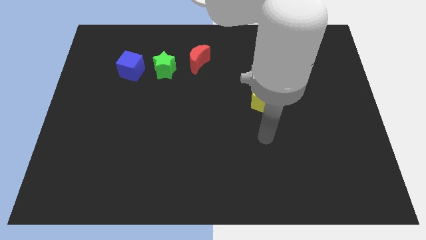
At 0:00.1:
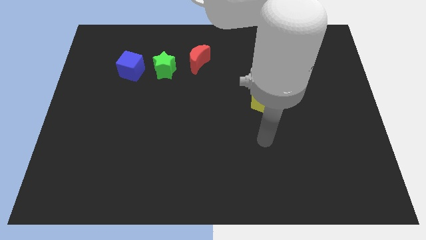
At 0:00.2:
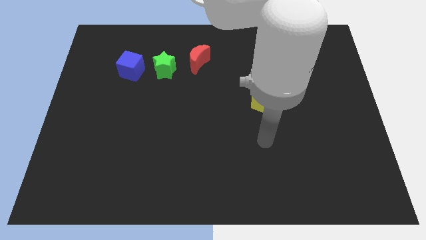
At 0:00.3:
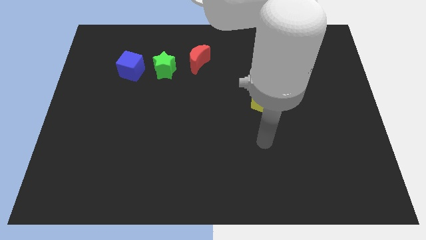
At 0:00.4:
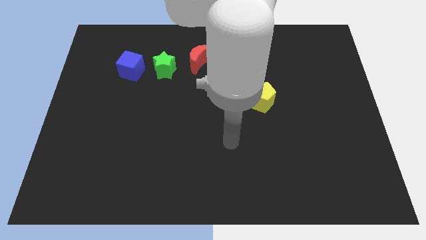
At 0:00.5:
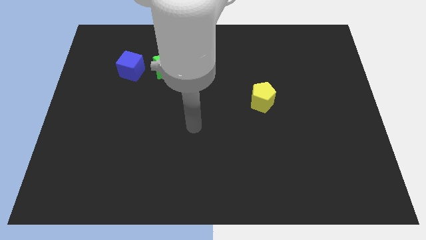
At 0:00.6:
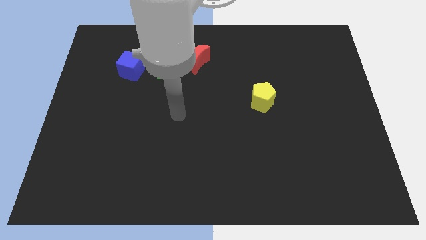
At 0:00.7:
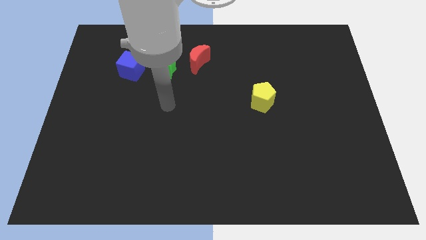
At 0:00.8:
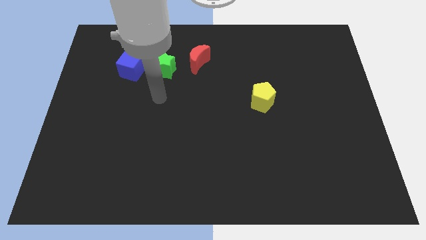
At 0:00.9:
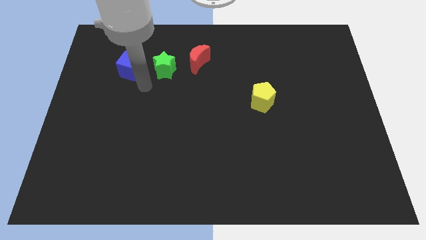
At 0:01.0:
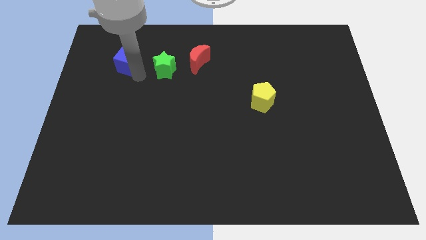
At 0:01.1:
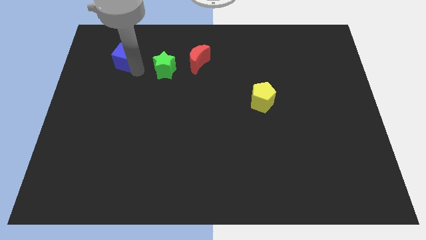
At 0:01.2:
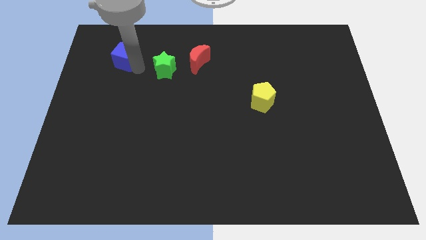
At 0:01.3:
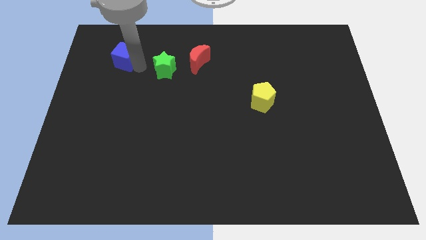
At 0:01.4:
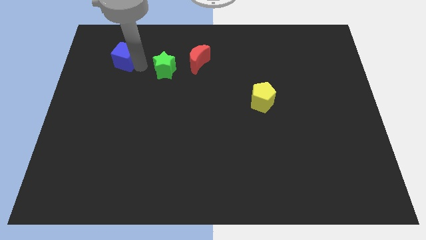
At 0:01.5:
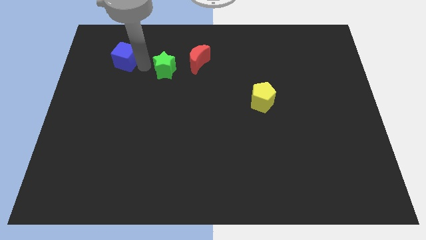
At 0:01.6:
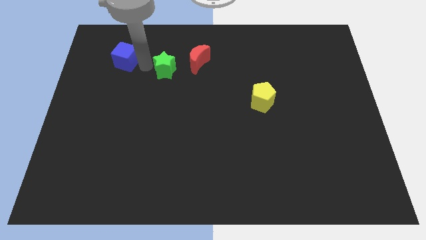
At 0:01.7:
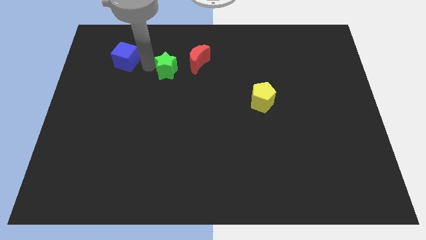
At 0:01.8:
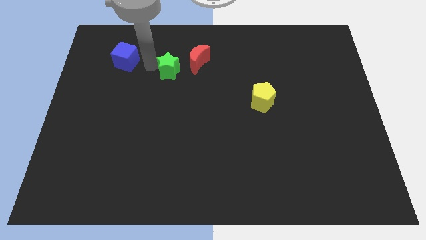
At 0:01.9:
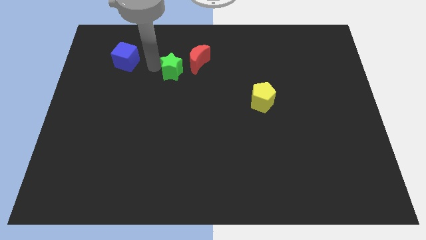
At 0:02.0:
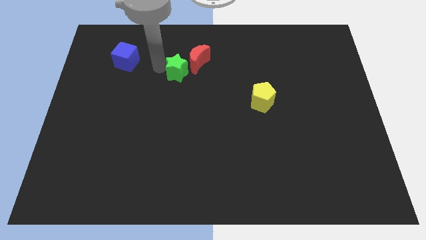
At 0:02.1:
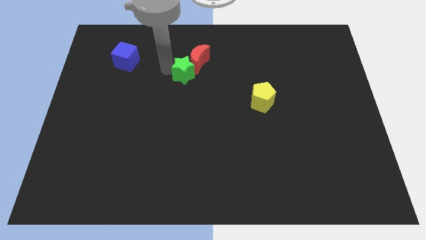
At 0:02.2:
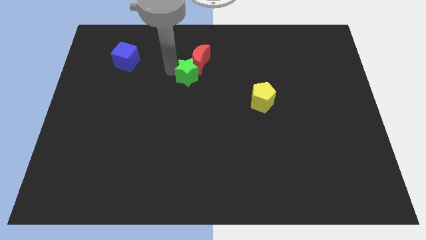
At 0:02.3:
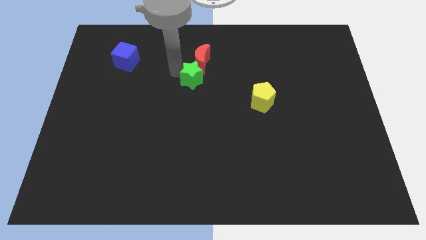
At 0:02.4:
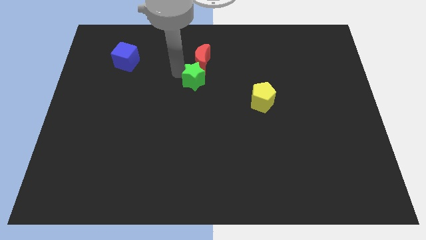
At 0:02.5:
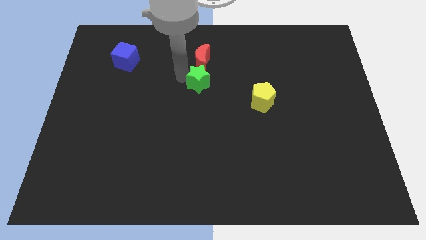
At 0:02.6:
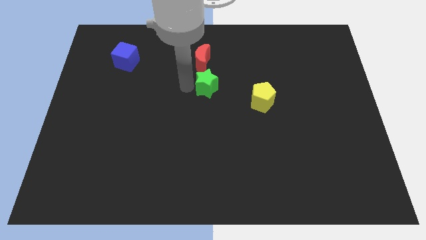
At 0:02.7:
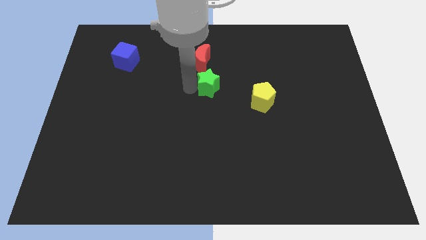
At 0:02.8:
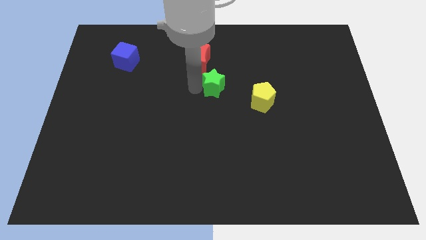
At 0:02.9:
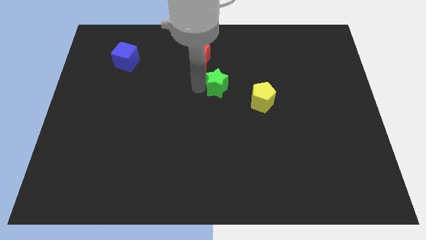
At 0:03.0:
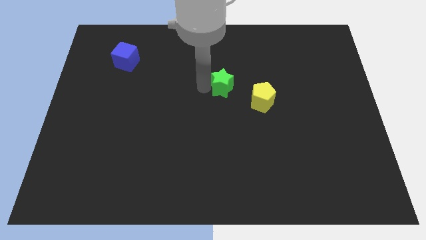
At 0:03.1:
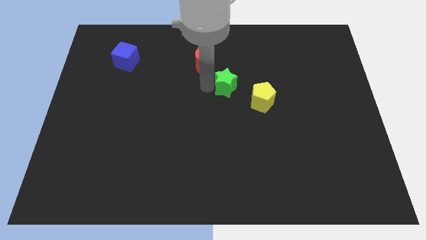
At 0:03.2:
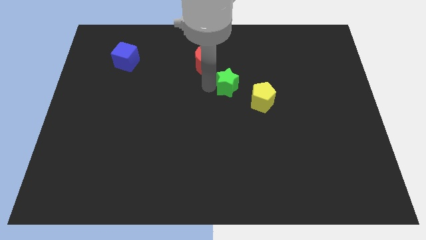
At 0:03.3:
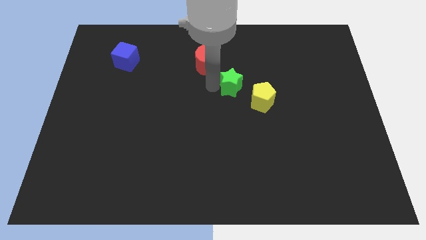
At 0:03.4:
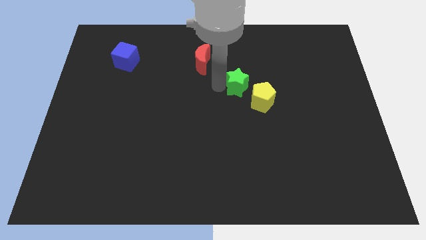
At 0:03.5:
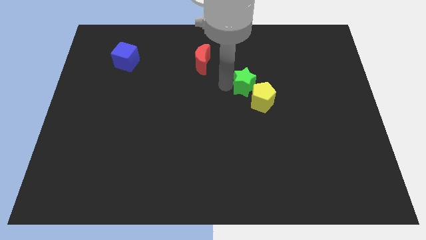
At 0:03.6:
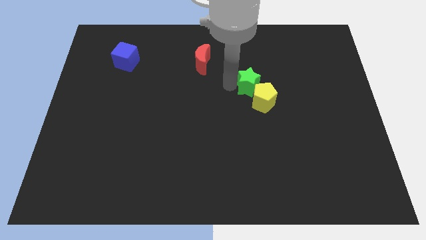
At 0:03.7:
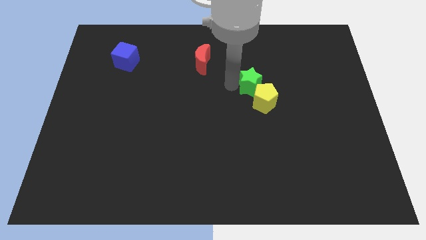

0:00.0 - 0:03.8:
push the green block to the pentagon

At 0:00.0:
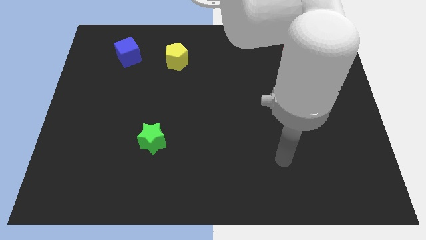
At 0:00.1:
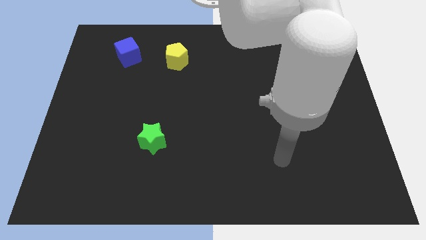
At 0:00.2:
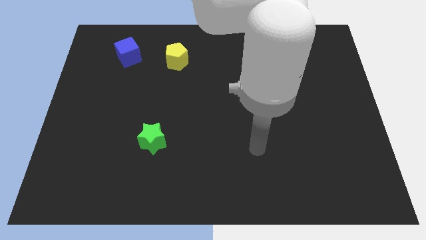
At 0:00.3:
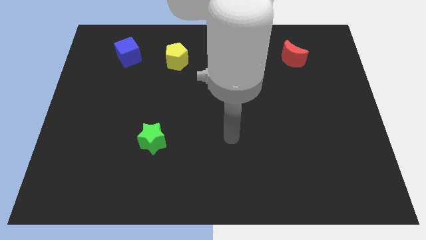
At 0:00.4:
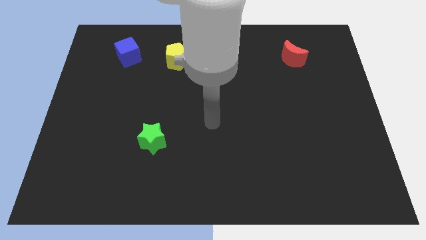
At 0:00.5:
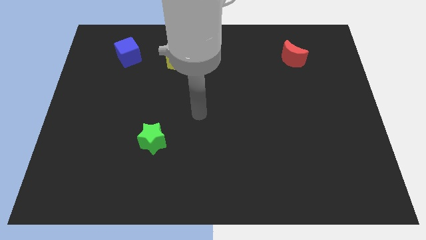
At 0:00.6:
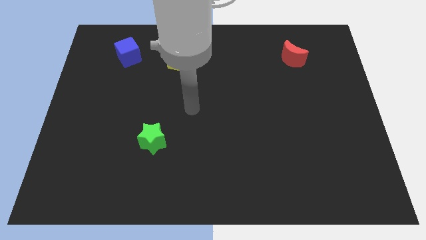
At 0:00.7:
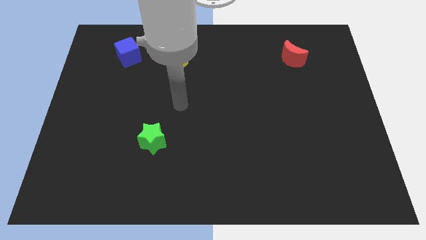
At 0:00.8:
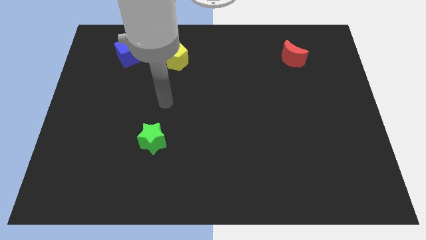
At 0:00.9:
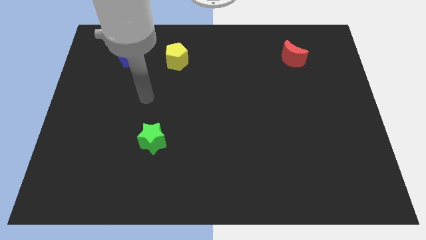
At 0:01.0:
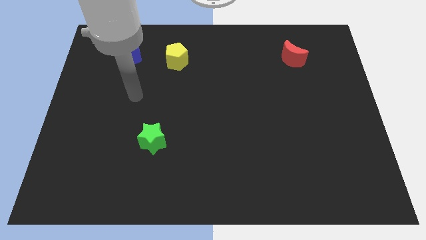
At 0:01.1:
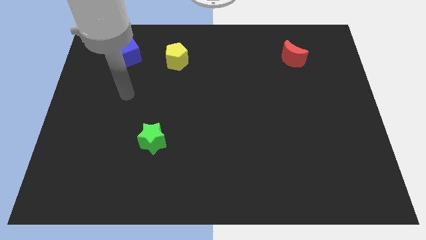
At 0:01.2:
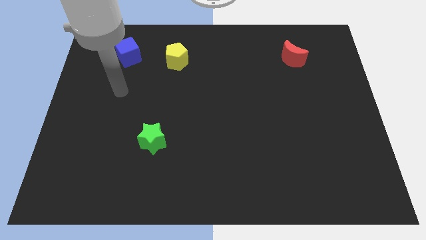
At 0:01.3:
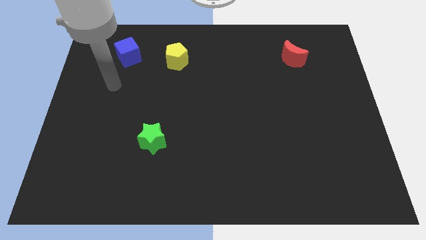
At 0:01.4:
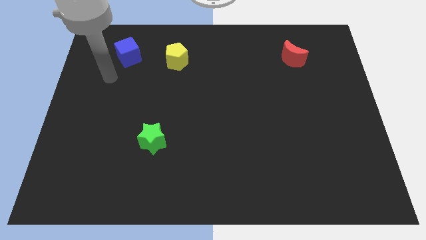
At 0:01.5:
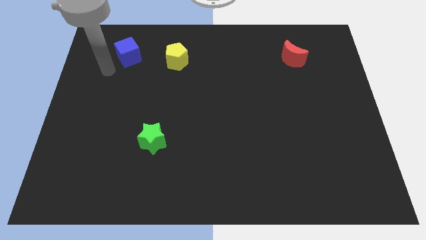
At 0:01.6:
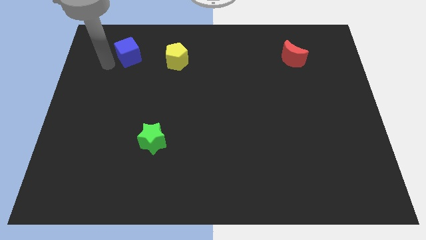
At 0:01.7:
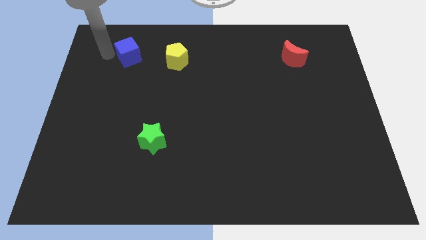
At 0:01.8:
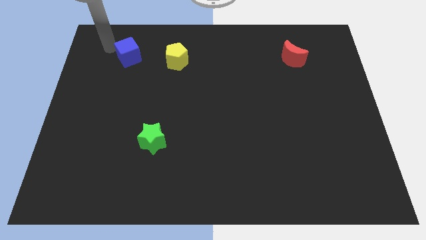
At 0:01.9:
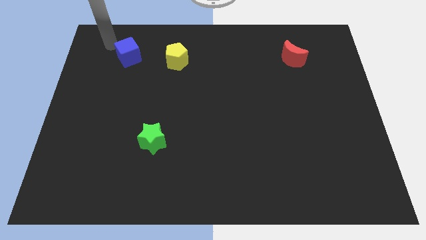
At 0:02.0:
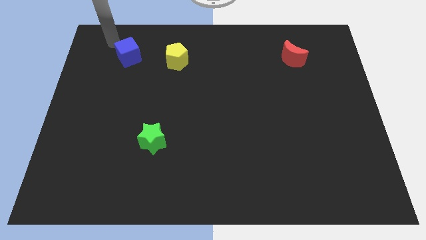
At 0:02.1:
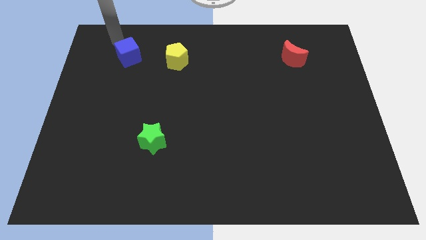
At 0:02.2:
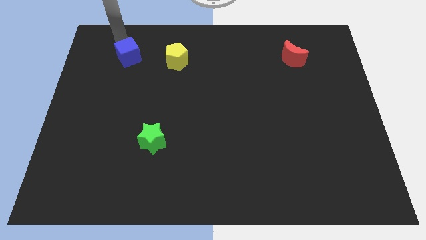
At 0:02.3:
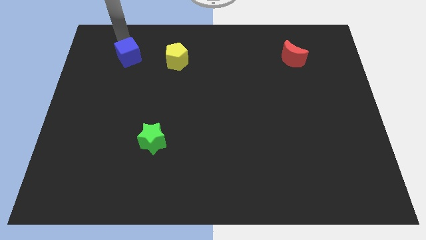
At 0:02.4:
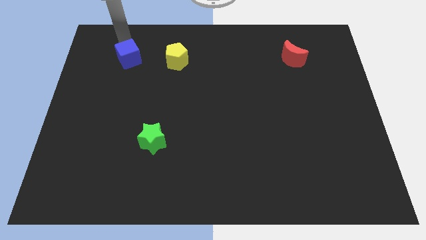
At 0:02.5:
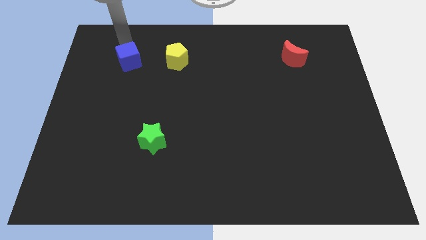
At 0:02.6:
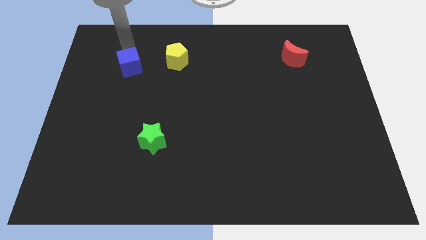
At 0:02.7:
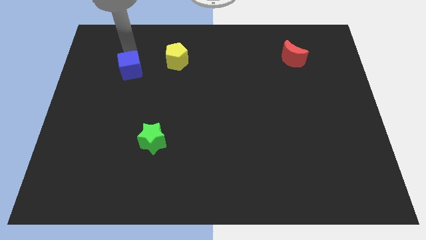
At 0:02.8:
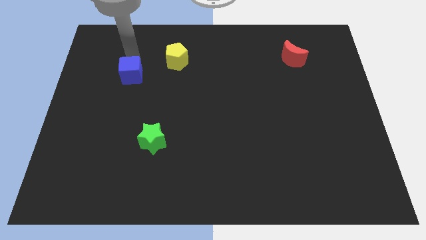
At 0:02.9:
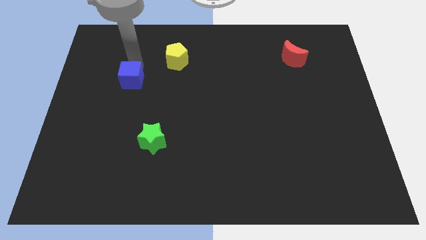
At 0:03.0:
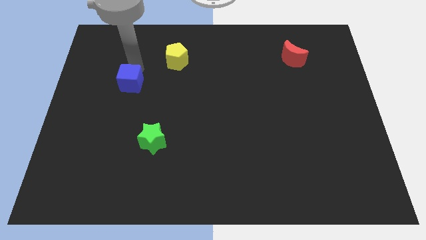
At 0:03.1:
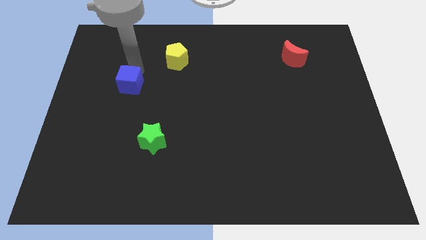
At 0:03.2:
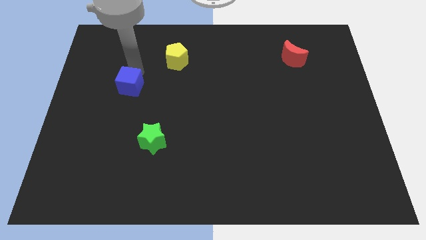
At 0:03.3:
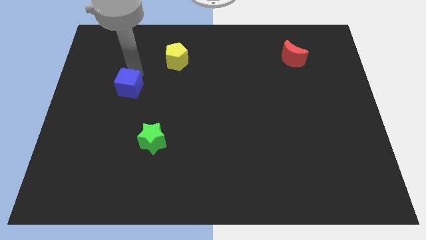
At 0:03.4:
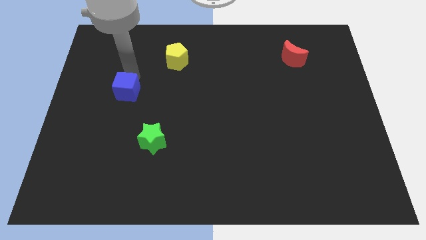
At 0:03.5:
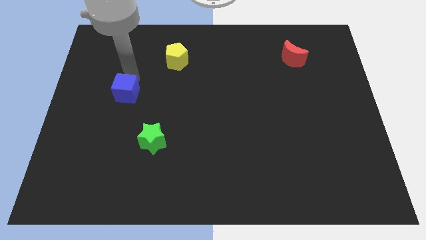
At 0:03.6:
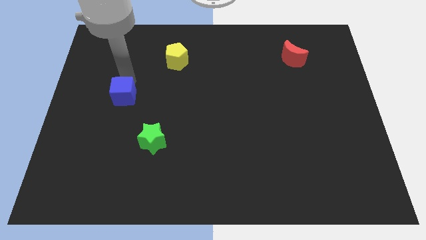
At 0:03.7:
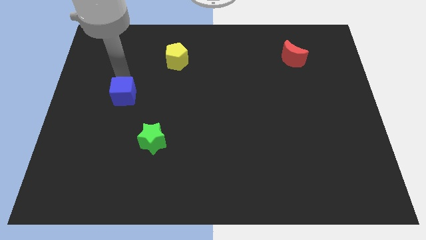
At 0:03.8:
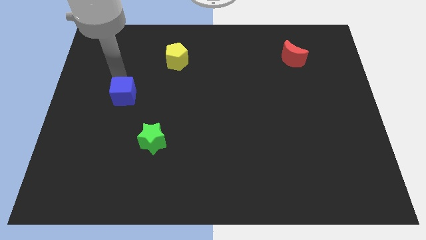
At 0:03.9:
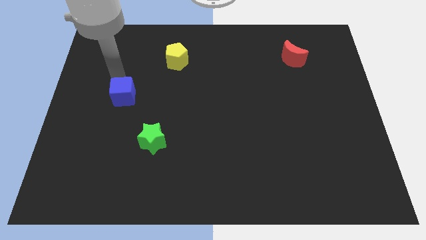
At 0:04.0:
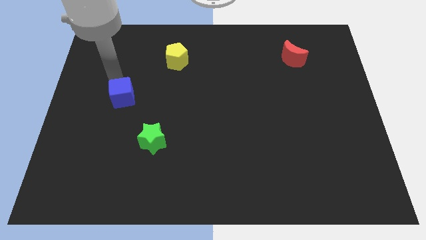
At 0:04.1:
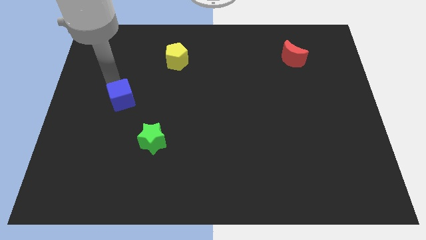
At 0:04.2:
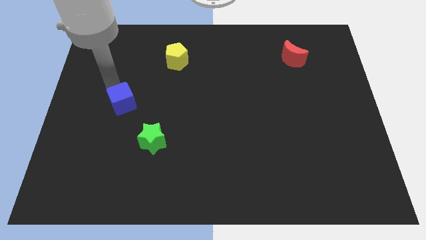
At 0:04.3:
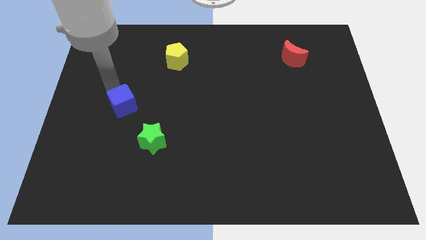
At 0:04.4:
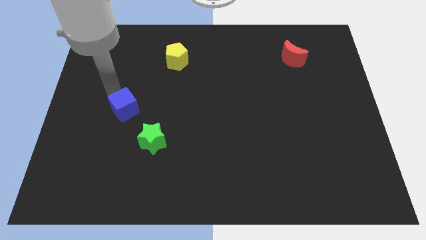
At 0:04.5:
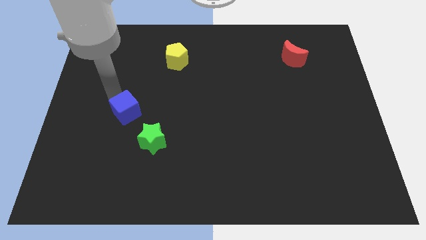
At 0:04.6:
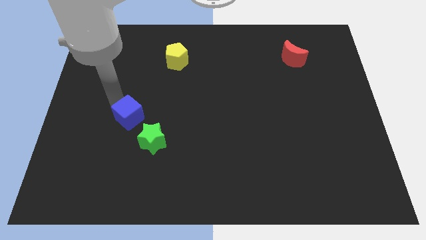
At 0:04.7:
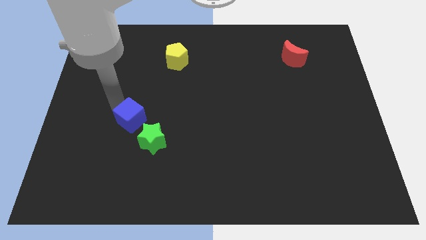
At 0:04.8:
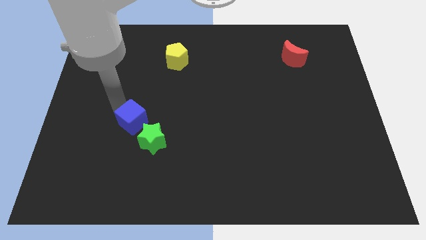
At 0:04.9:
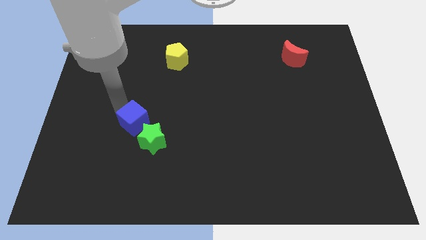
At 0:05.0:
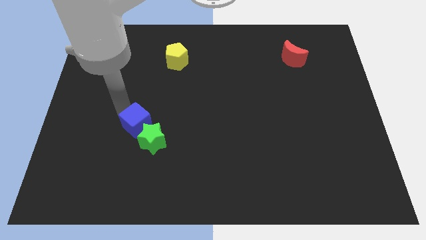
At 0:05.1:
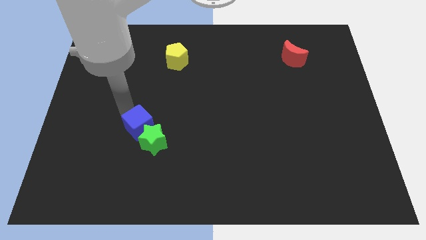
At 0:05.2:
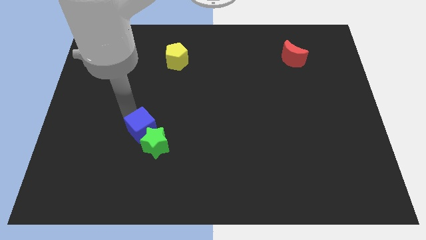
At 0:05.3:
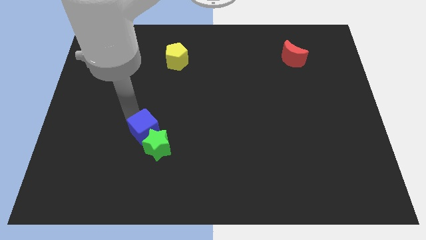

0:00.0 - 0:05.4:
move the blue cube close to the green star
